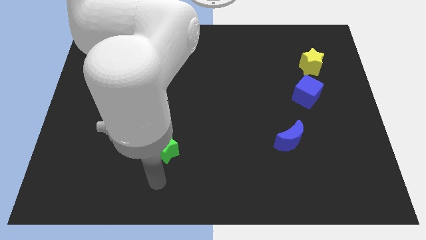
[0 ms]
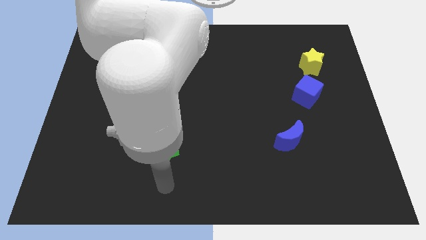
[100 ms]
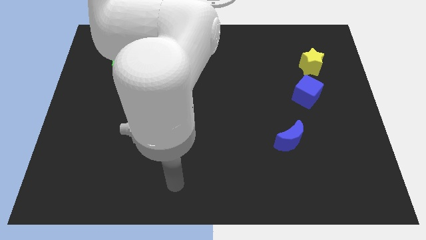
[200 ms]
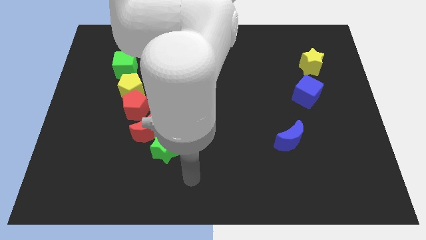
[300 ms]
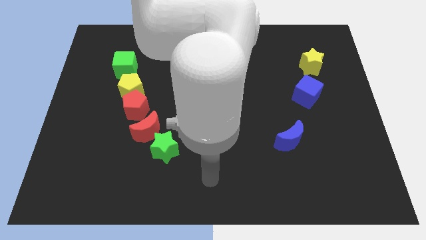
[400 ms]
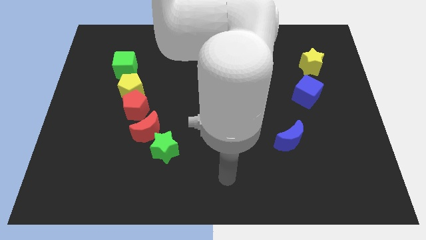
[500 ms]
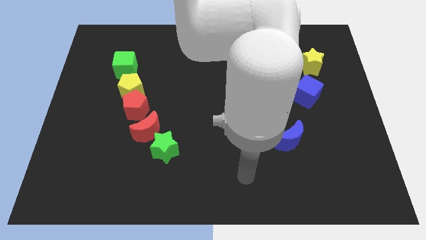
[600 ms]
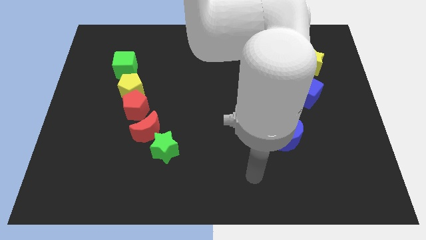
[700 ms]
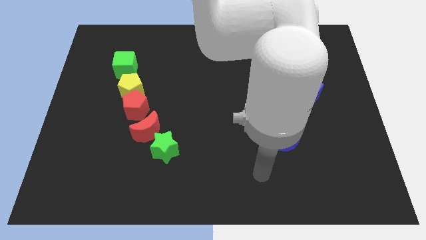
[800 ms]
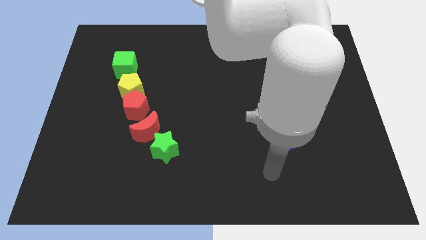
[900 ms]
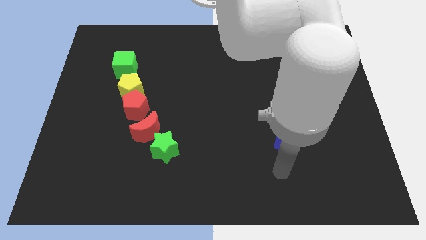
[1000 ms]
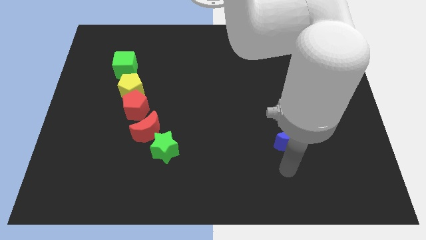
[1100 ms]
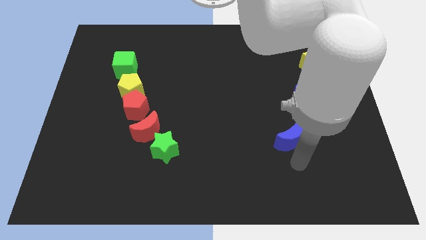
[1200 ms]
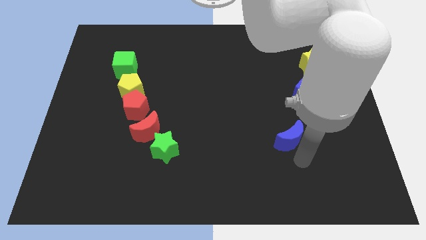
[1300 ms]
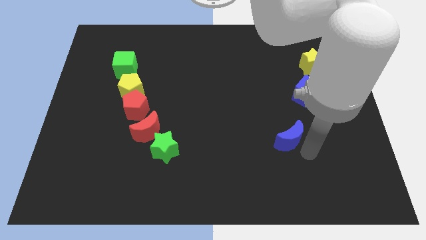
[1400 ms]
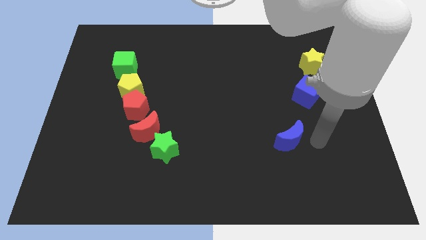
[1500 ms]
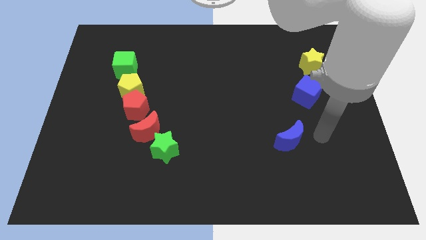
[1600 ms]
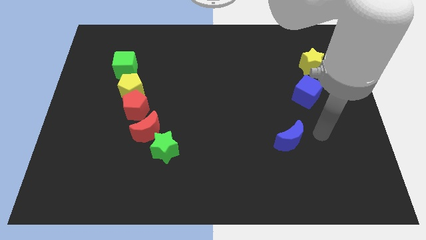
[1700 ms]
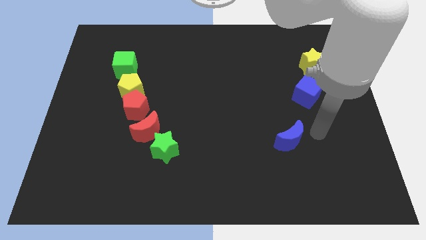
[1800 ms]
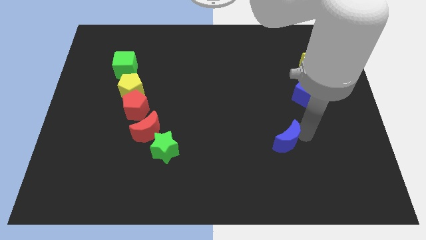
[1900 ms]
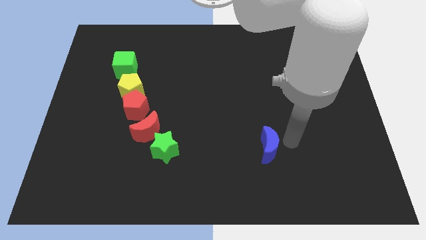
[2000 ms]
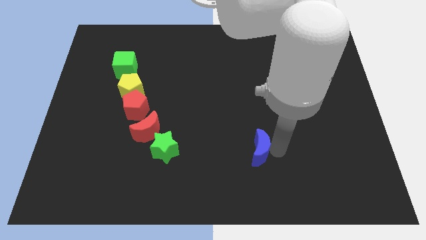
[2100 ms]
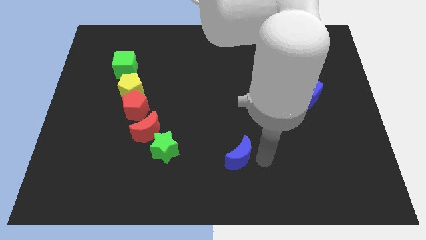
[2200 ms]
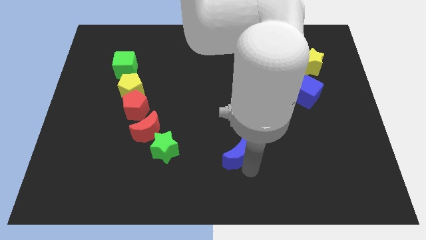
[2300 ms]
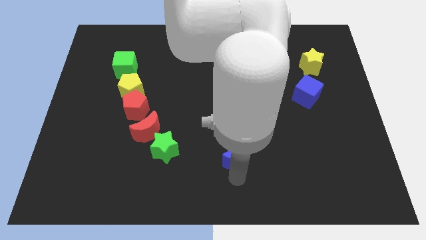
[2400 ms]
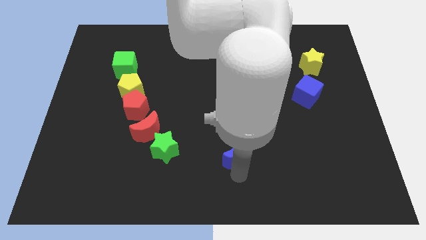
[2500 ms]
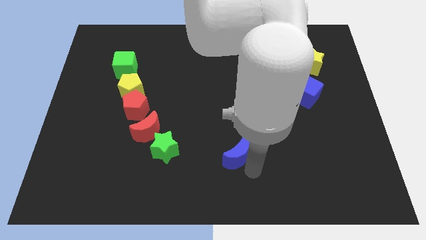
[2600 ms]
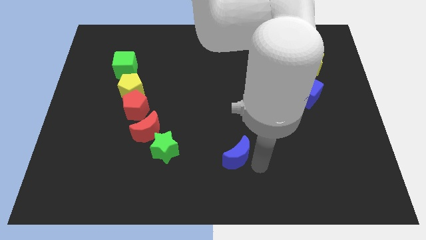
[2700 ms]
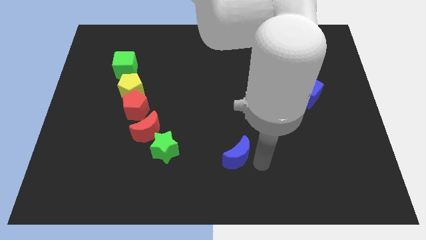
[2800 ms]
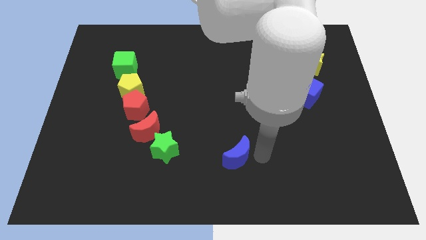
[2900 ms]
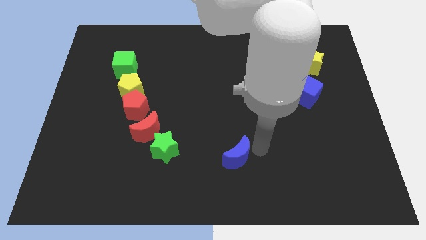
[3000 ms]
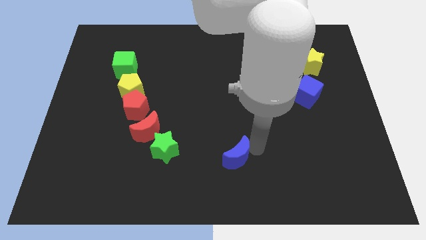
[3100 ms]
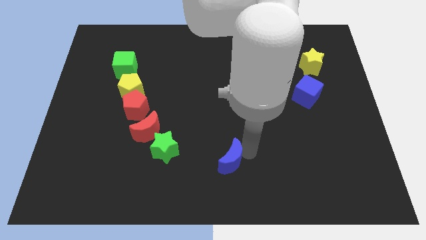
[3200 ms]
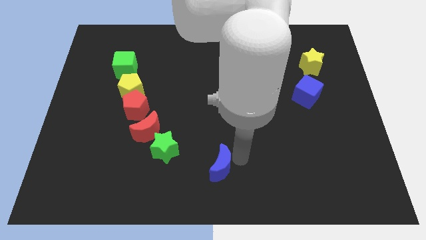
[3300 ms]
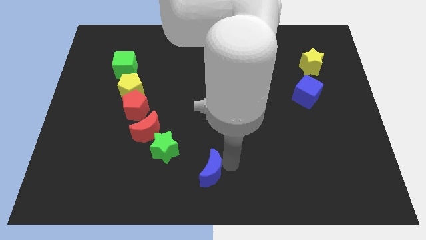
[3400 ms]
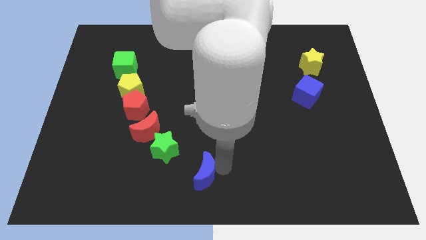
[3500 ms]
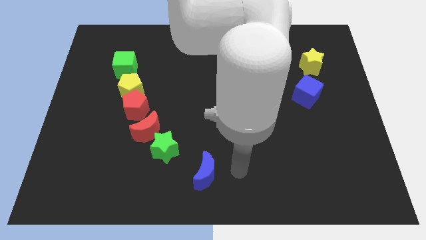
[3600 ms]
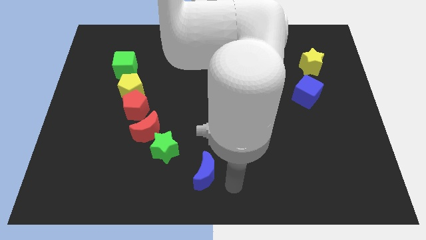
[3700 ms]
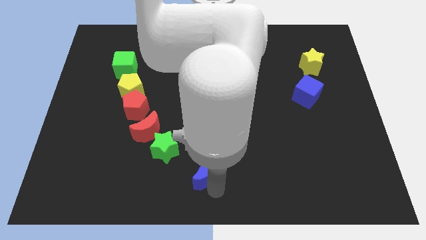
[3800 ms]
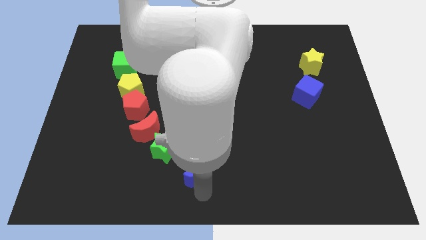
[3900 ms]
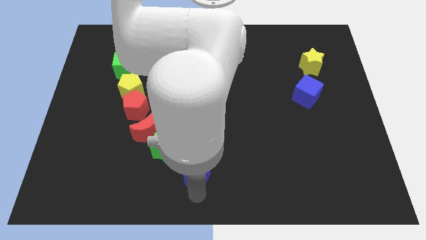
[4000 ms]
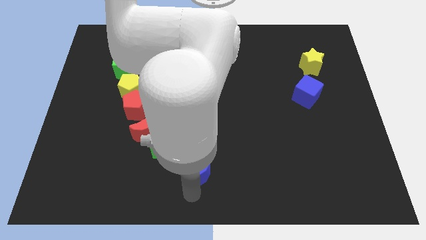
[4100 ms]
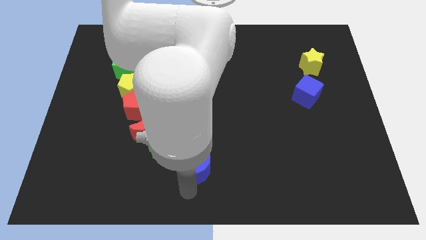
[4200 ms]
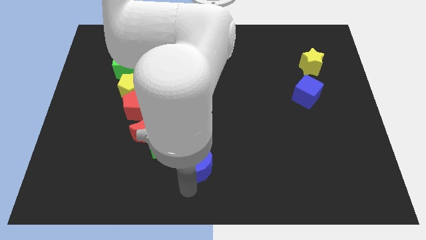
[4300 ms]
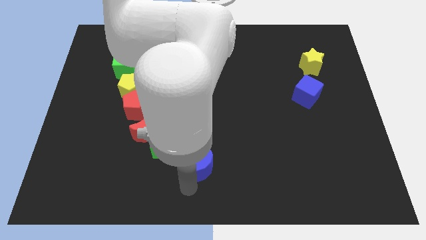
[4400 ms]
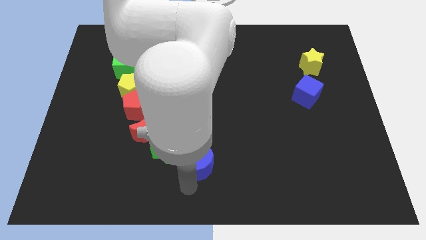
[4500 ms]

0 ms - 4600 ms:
push the blue crescent below the green star

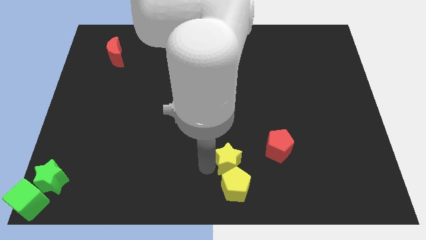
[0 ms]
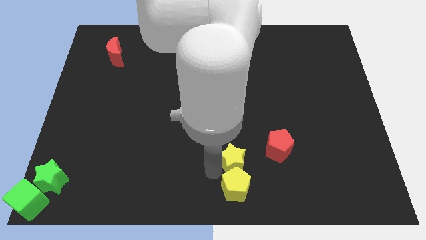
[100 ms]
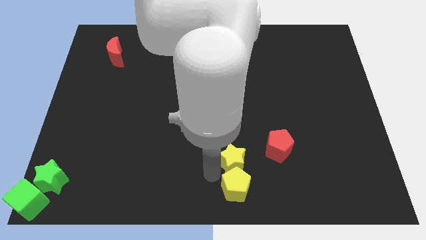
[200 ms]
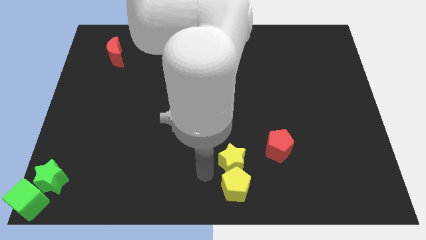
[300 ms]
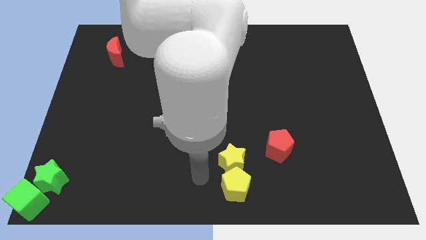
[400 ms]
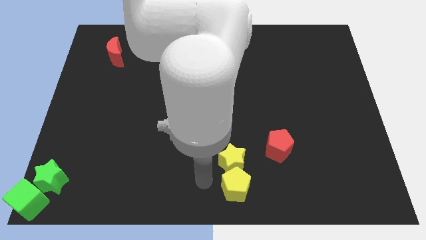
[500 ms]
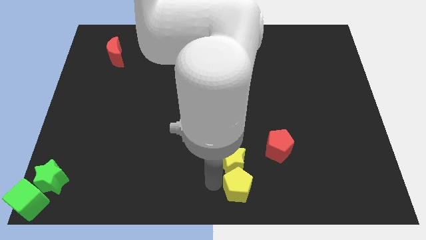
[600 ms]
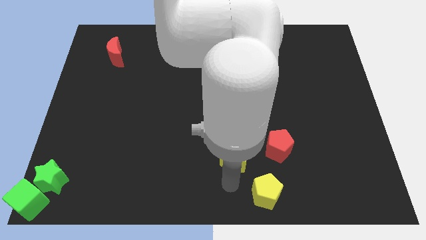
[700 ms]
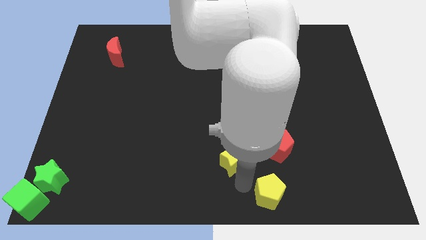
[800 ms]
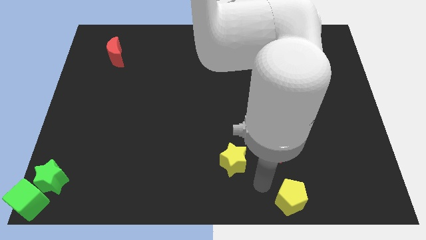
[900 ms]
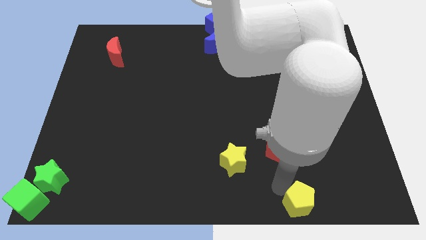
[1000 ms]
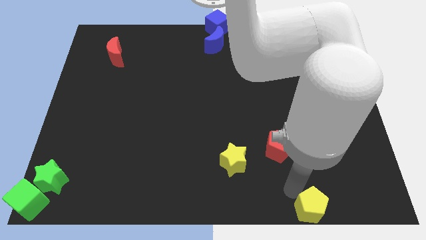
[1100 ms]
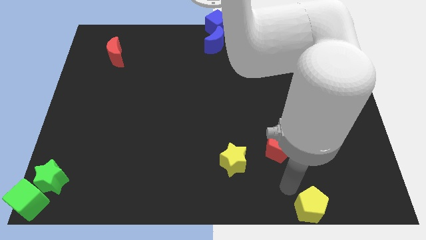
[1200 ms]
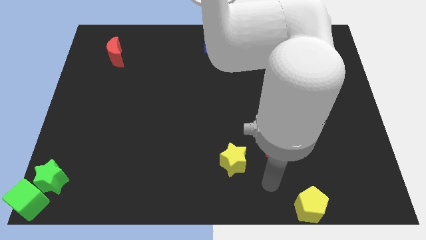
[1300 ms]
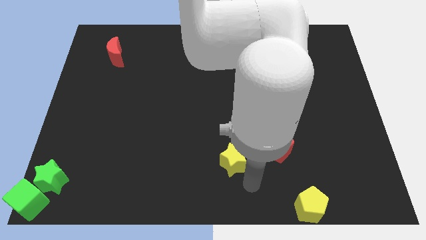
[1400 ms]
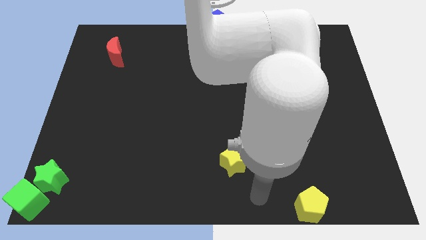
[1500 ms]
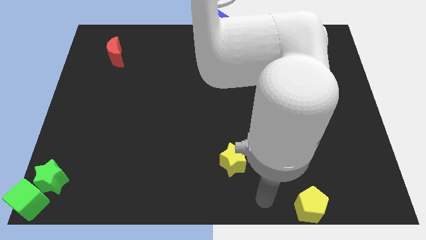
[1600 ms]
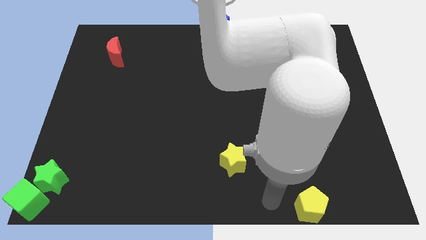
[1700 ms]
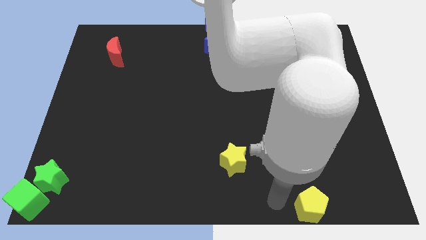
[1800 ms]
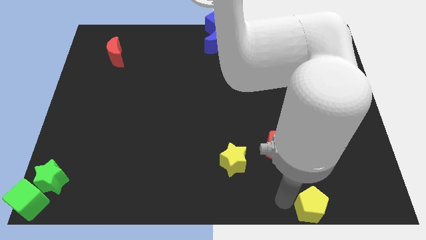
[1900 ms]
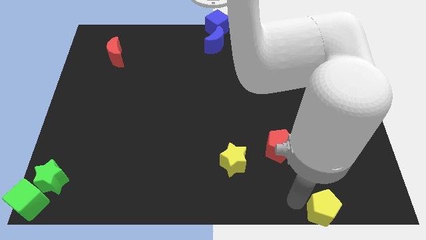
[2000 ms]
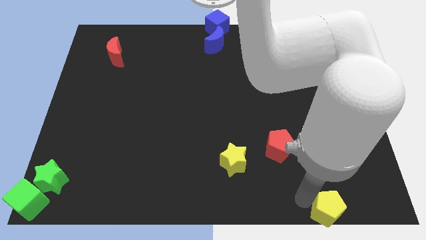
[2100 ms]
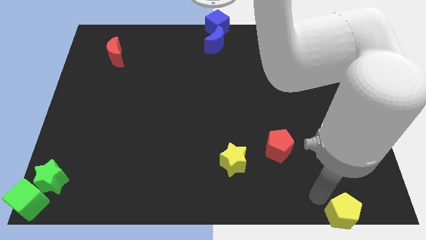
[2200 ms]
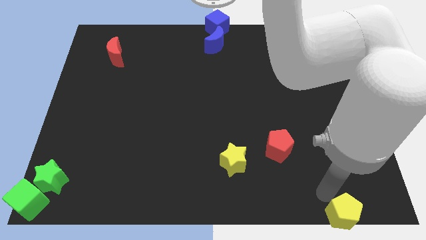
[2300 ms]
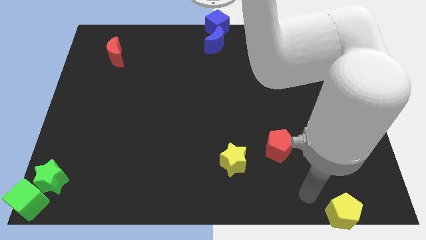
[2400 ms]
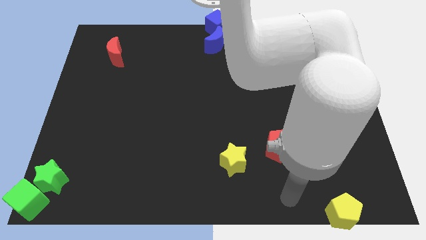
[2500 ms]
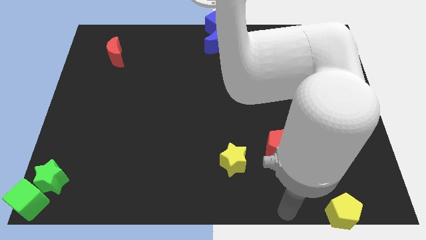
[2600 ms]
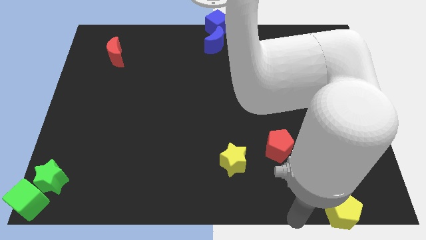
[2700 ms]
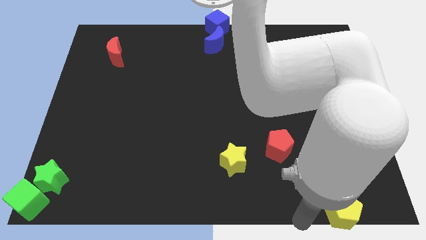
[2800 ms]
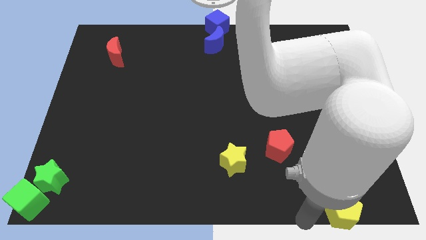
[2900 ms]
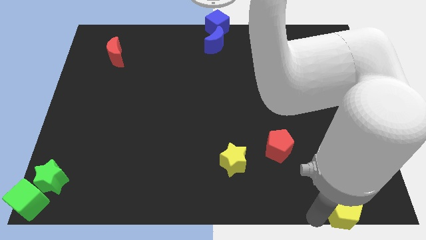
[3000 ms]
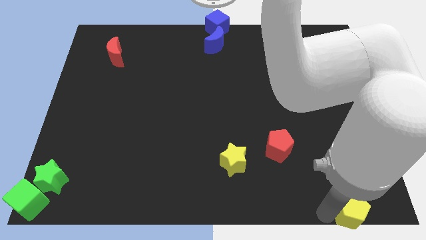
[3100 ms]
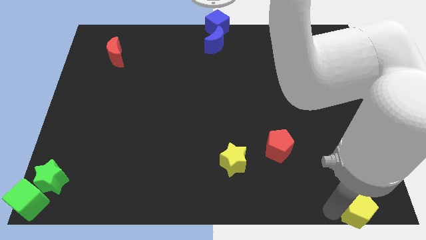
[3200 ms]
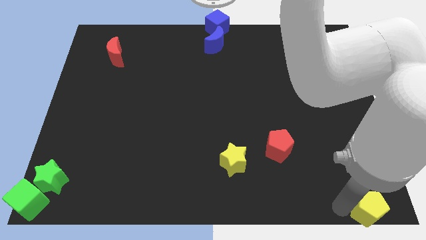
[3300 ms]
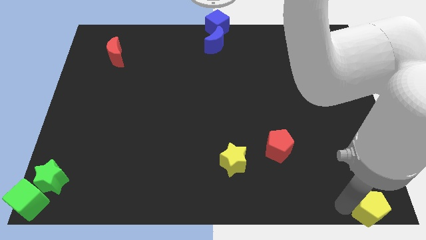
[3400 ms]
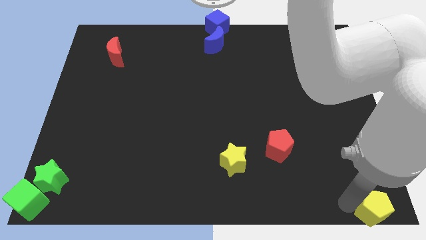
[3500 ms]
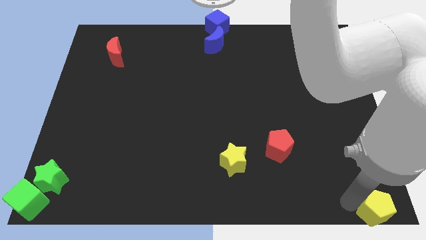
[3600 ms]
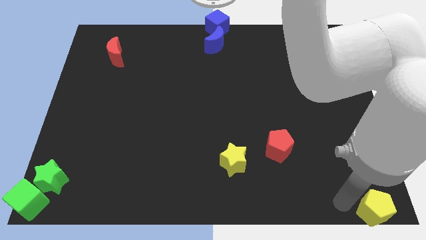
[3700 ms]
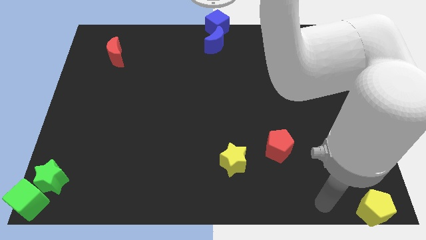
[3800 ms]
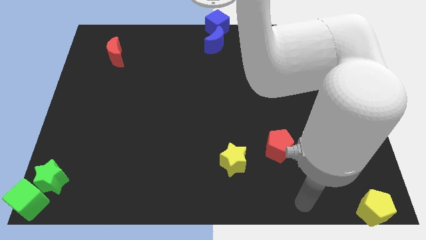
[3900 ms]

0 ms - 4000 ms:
move the yellow pentagon into the bottom right corner

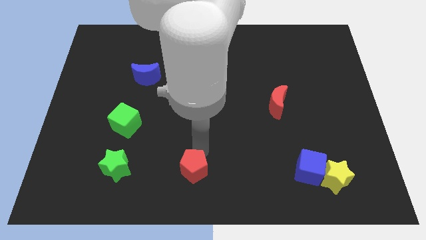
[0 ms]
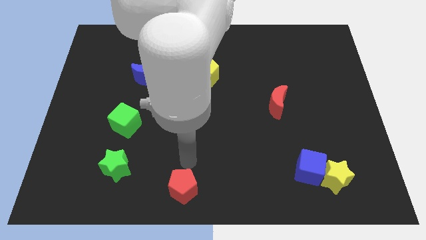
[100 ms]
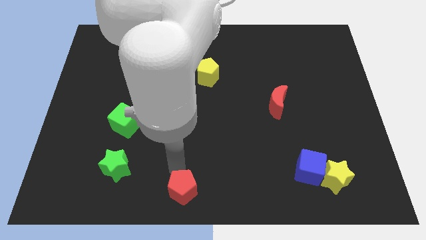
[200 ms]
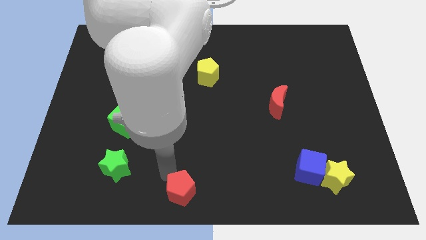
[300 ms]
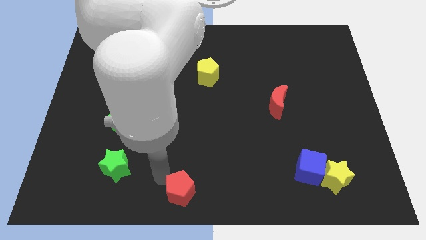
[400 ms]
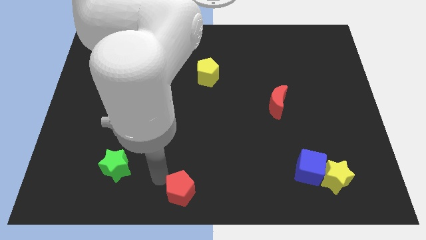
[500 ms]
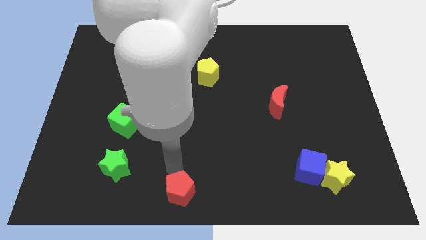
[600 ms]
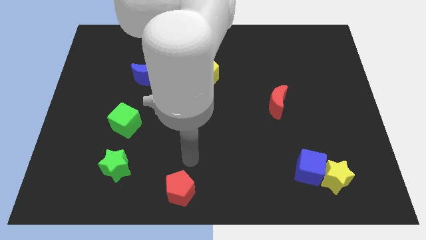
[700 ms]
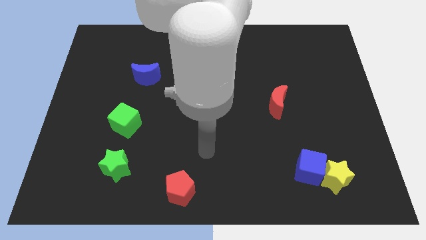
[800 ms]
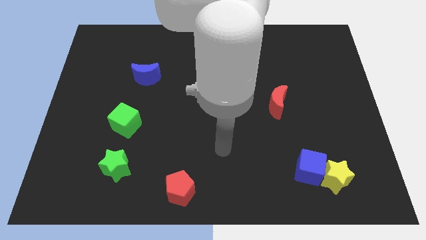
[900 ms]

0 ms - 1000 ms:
push the red pentagon slightly downwards
